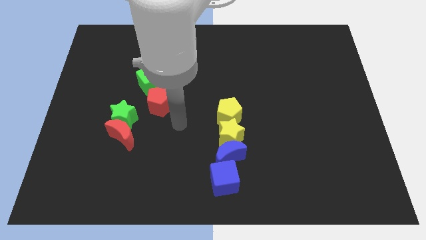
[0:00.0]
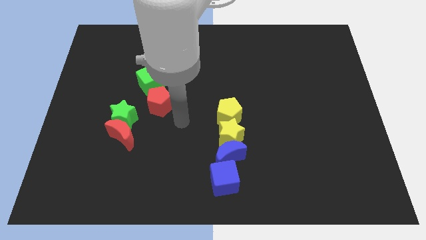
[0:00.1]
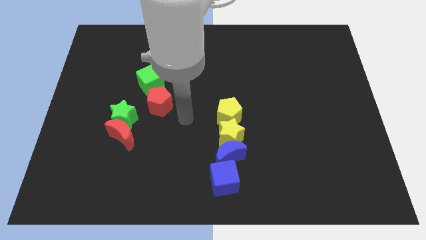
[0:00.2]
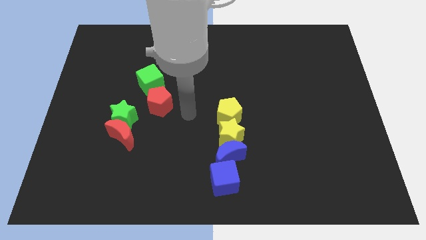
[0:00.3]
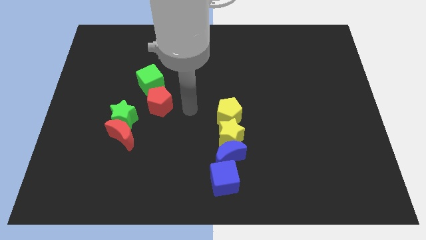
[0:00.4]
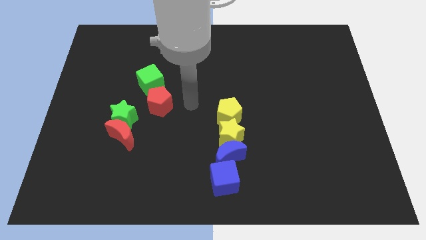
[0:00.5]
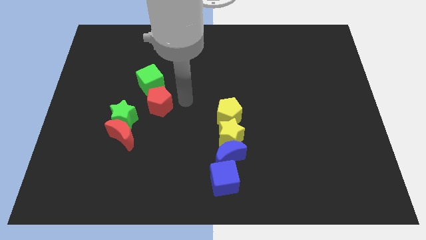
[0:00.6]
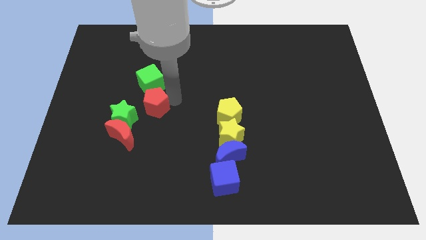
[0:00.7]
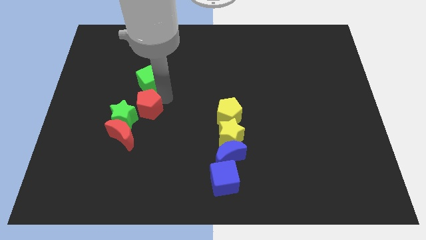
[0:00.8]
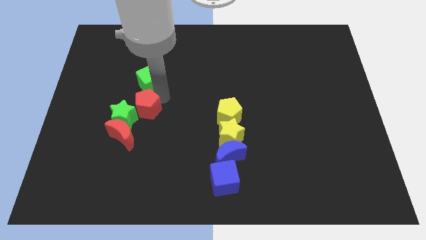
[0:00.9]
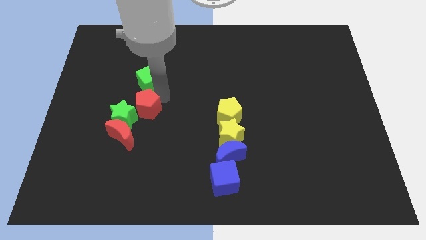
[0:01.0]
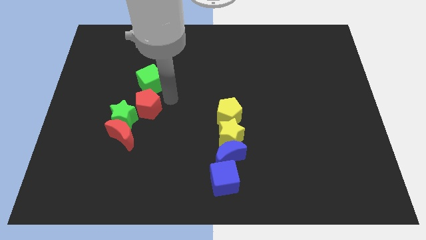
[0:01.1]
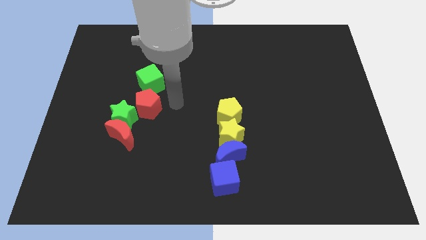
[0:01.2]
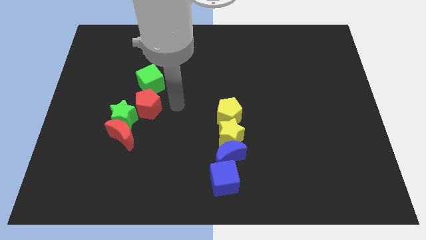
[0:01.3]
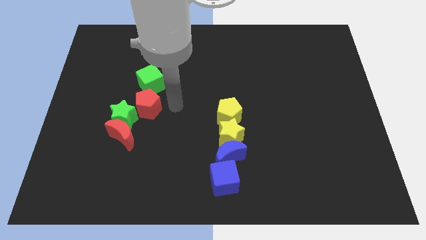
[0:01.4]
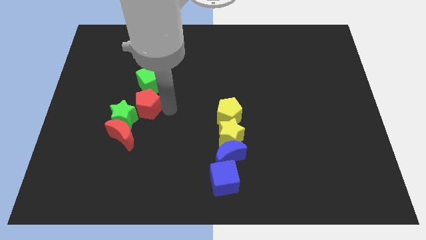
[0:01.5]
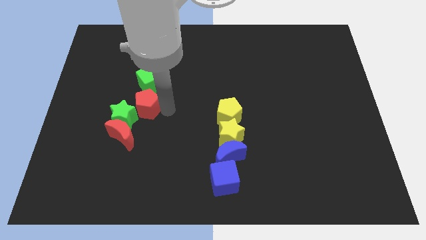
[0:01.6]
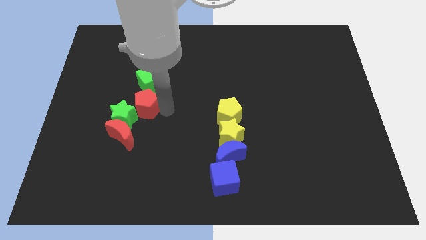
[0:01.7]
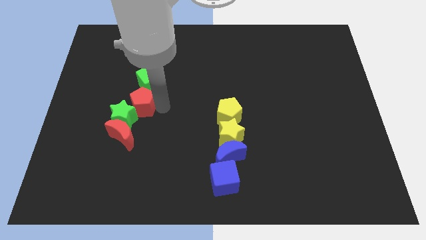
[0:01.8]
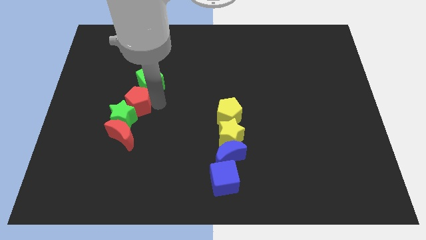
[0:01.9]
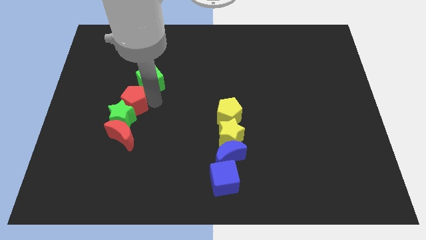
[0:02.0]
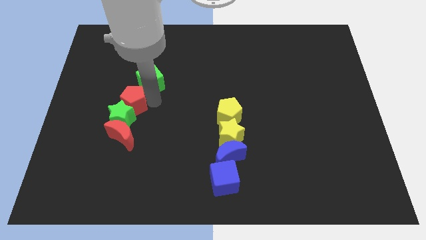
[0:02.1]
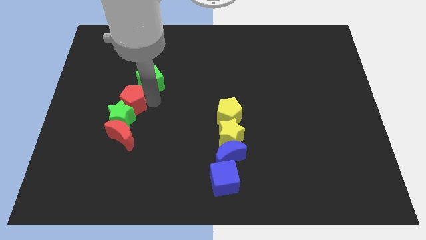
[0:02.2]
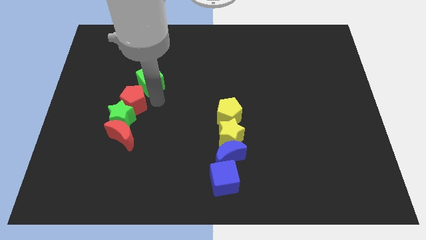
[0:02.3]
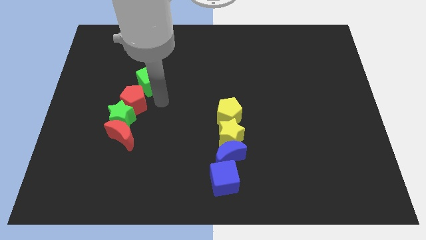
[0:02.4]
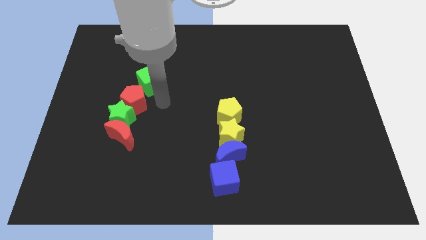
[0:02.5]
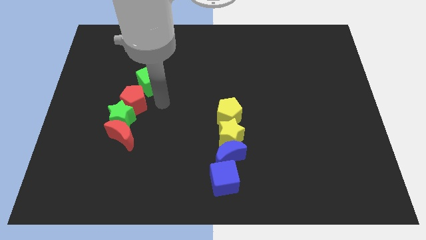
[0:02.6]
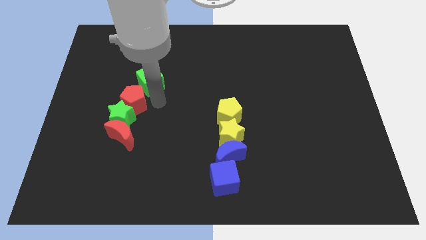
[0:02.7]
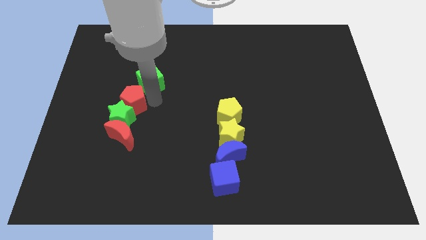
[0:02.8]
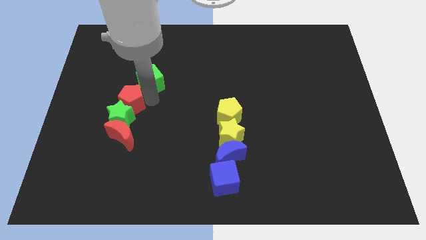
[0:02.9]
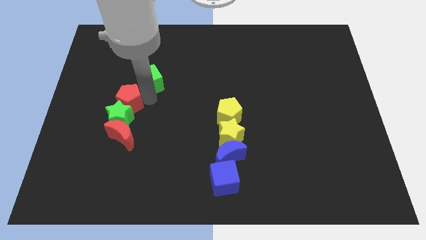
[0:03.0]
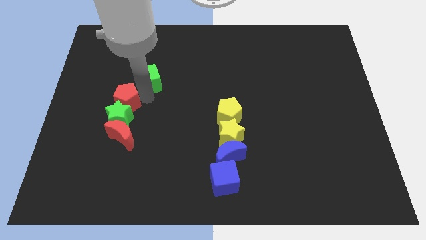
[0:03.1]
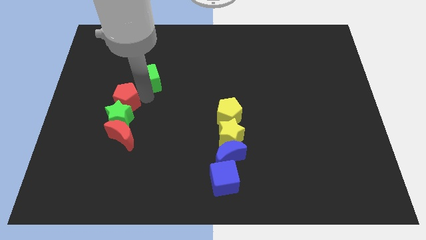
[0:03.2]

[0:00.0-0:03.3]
move the red pentagon to the top of the green star

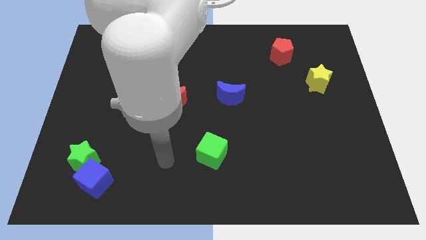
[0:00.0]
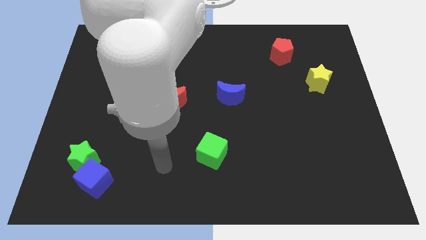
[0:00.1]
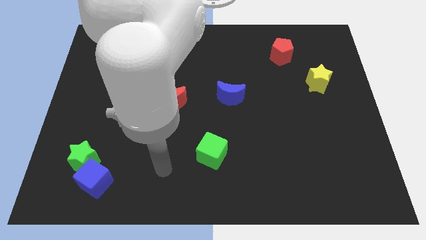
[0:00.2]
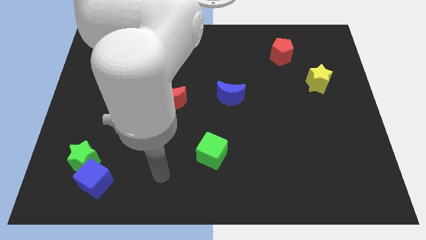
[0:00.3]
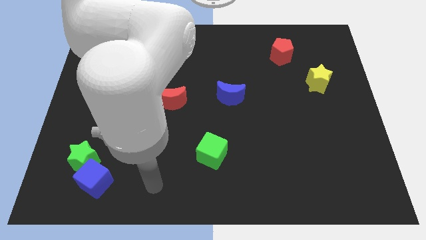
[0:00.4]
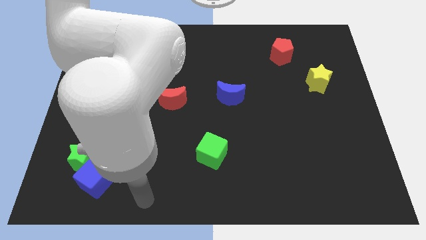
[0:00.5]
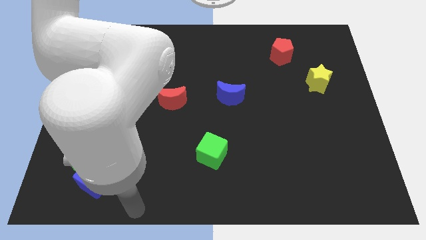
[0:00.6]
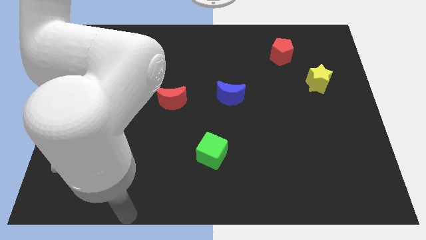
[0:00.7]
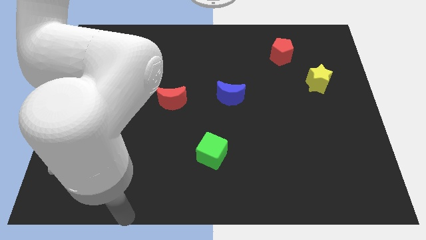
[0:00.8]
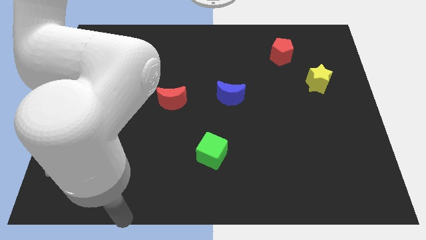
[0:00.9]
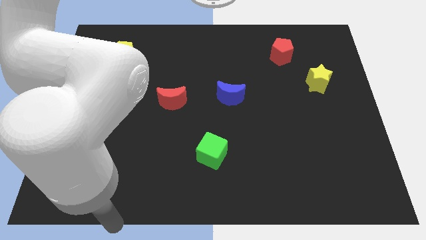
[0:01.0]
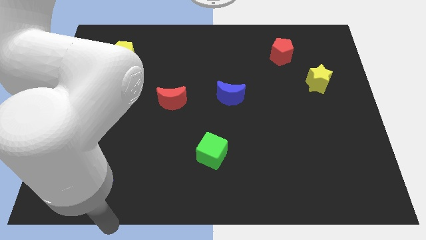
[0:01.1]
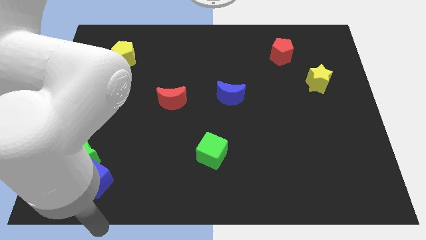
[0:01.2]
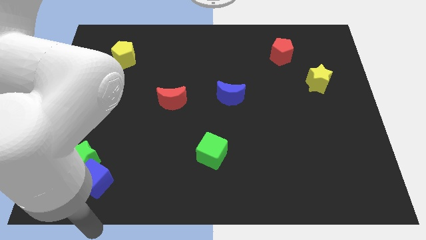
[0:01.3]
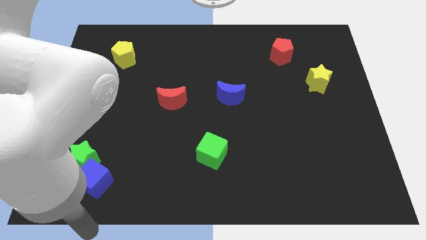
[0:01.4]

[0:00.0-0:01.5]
move the arm towards the bottom of the board

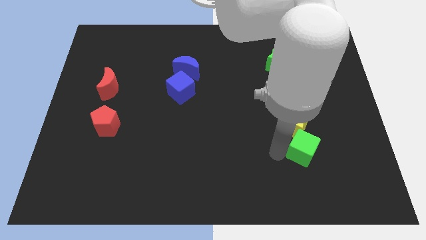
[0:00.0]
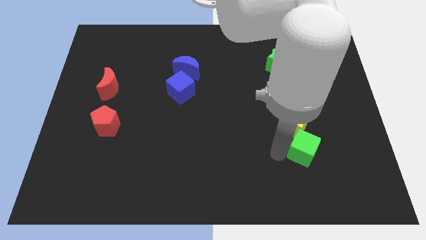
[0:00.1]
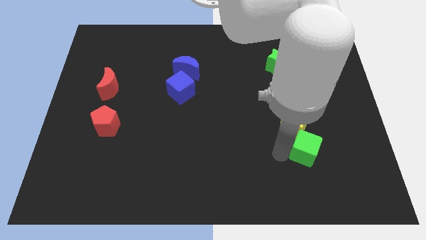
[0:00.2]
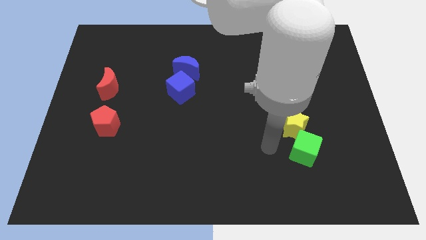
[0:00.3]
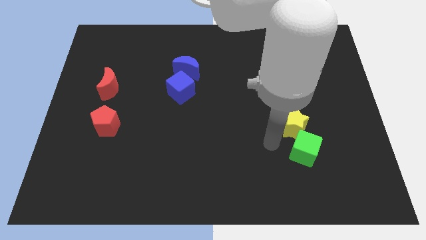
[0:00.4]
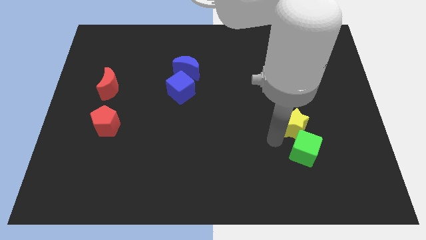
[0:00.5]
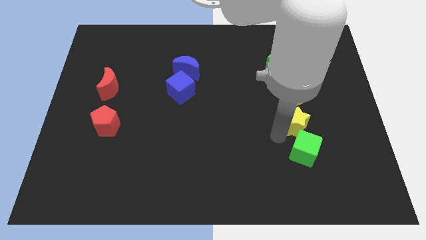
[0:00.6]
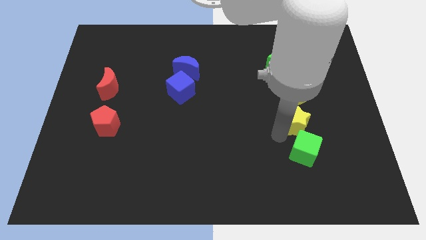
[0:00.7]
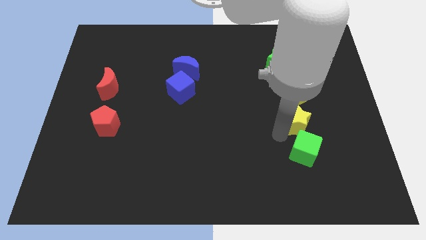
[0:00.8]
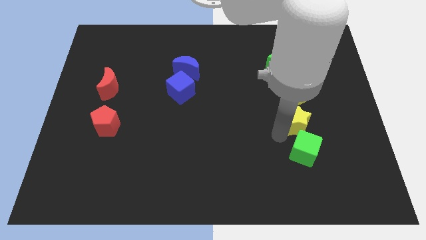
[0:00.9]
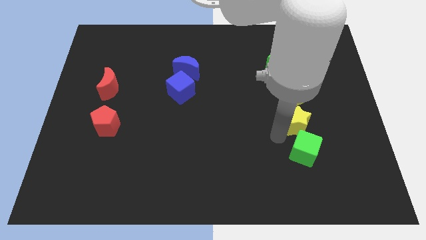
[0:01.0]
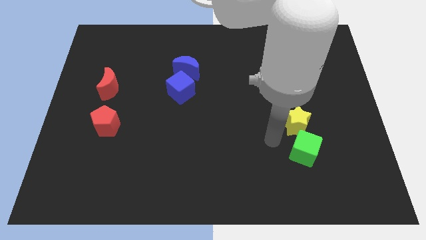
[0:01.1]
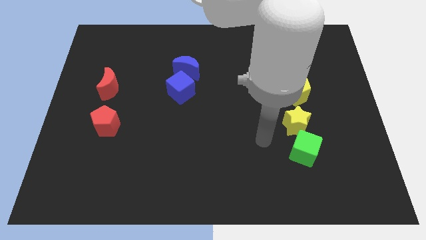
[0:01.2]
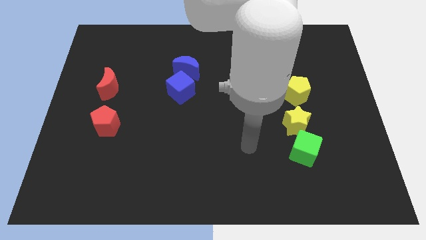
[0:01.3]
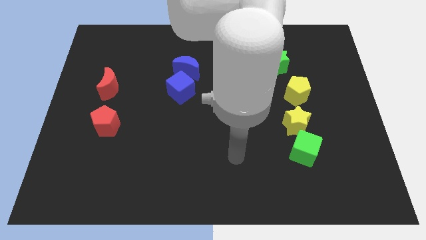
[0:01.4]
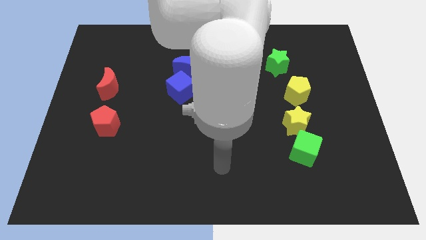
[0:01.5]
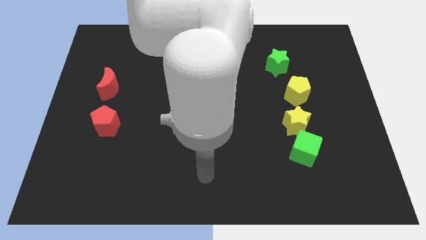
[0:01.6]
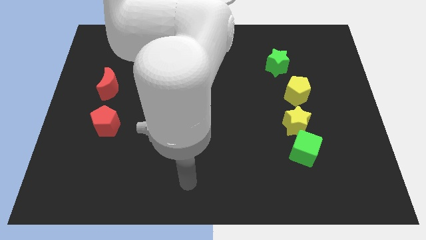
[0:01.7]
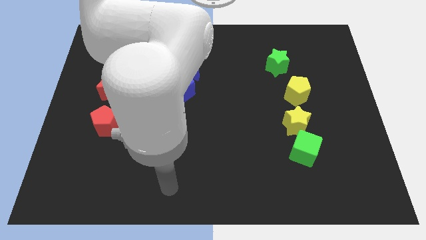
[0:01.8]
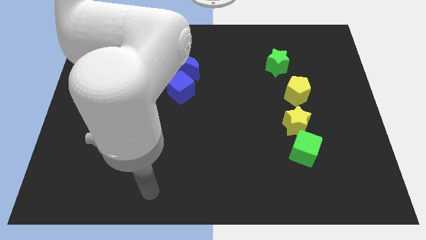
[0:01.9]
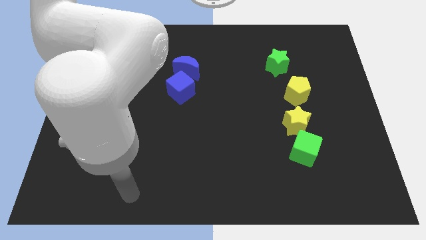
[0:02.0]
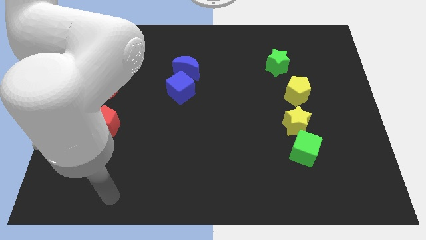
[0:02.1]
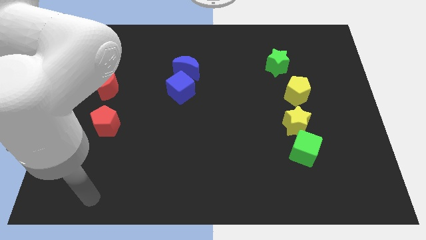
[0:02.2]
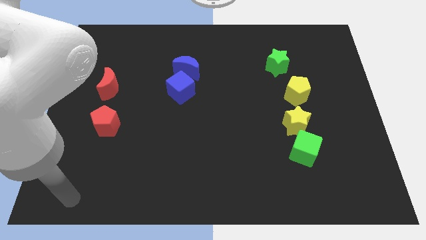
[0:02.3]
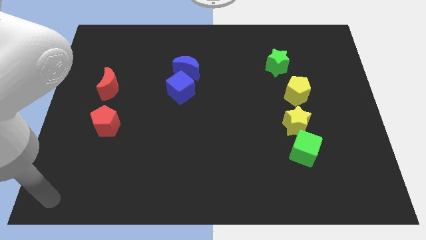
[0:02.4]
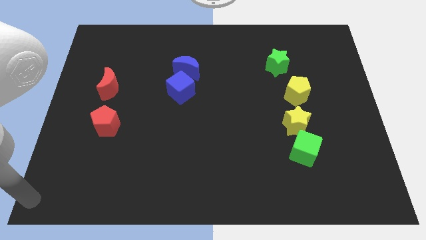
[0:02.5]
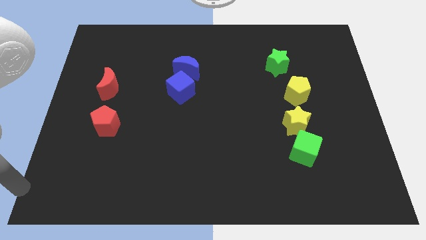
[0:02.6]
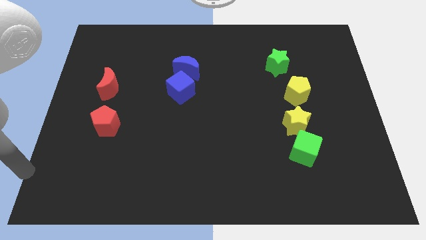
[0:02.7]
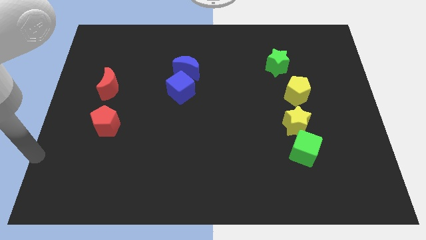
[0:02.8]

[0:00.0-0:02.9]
move your arm away from the yellow star

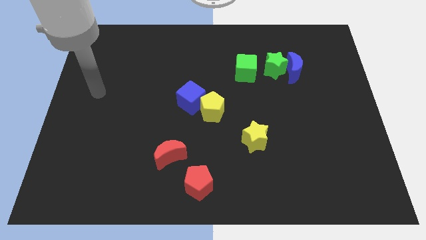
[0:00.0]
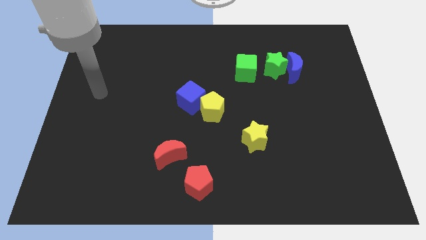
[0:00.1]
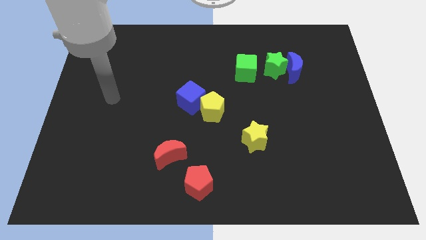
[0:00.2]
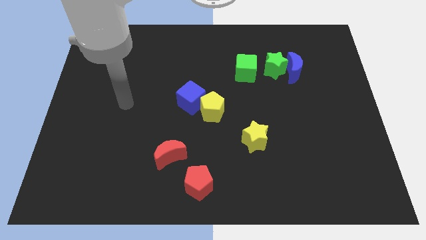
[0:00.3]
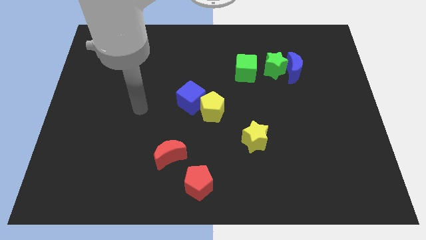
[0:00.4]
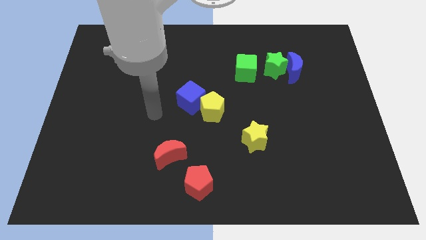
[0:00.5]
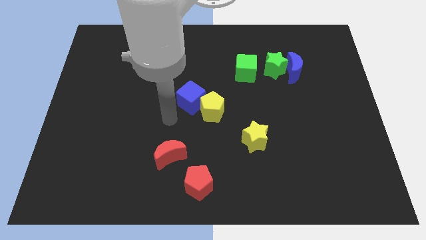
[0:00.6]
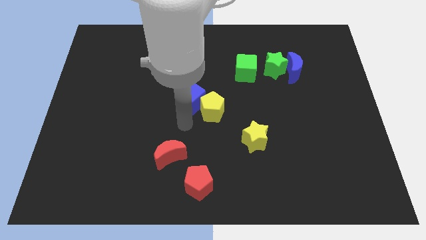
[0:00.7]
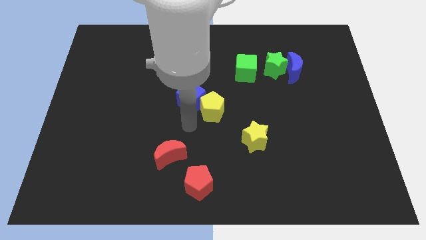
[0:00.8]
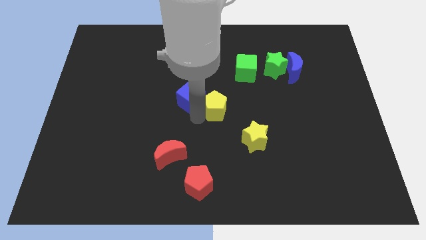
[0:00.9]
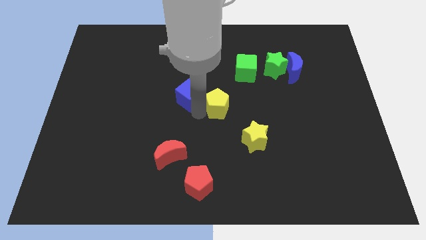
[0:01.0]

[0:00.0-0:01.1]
split the yellow pentagon from blue cube slightly

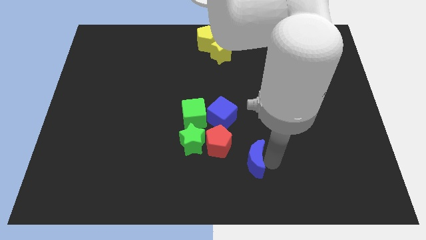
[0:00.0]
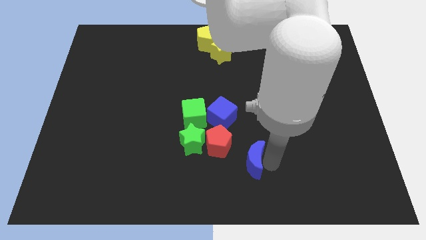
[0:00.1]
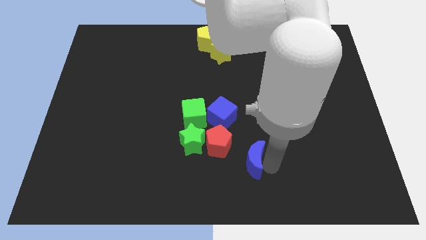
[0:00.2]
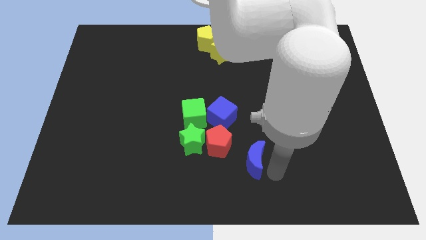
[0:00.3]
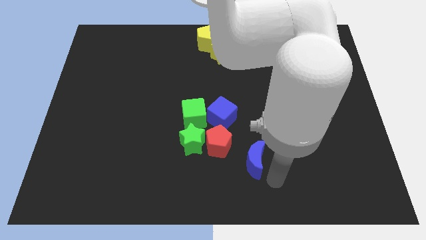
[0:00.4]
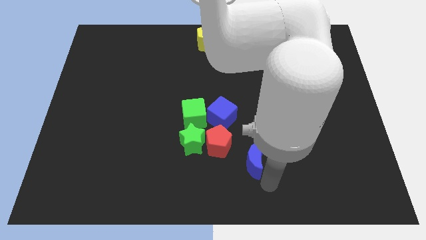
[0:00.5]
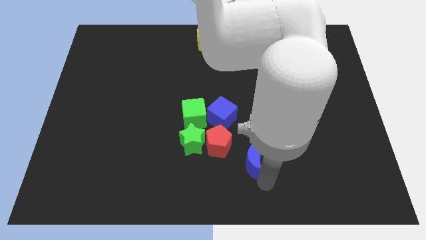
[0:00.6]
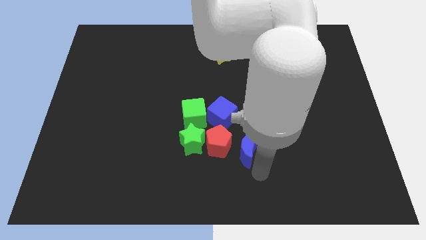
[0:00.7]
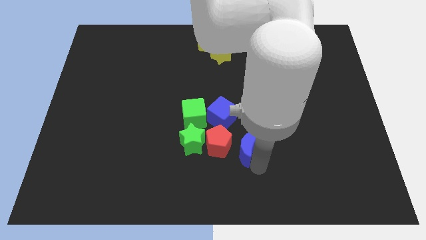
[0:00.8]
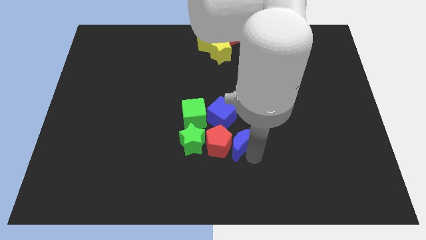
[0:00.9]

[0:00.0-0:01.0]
place the blue moon to the right side of red pentagon
